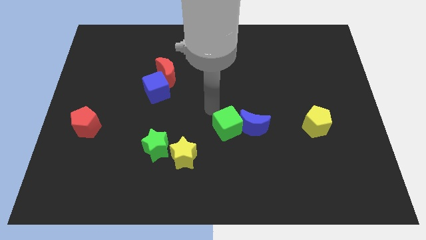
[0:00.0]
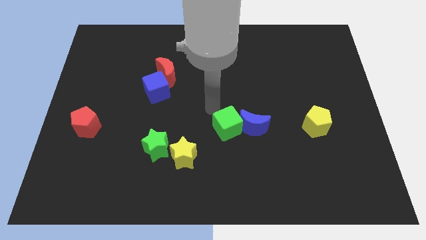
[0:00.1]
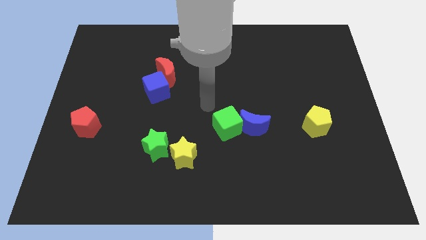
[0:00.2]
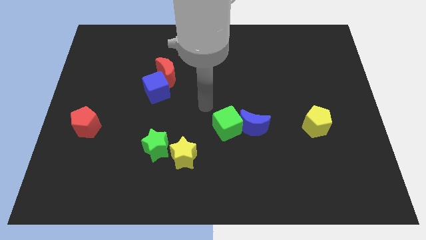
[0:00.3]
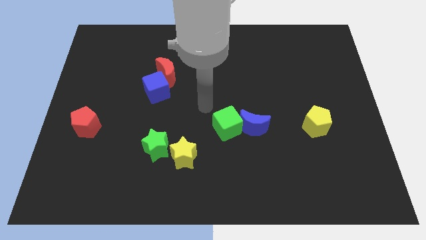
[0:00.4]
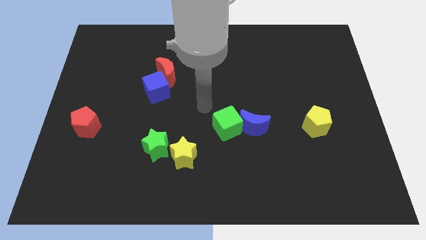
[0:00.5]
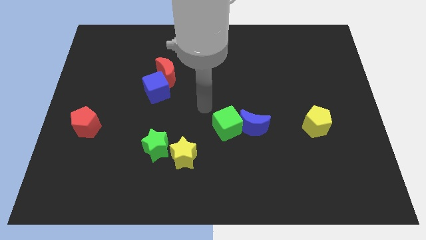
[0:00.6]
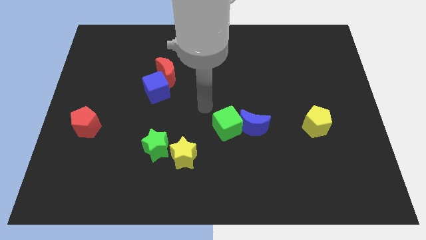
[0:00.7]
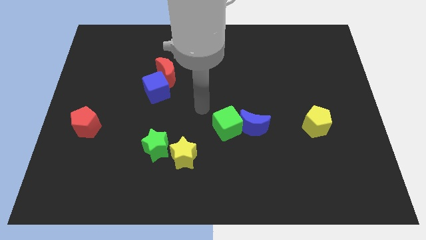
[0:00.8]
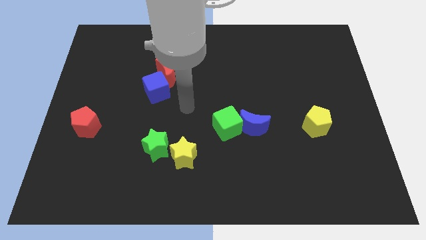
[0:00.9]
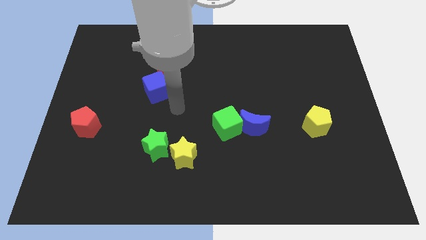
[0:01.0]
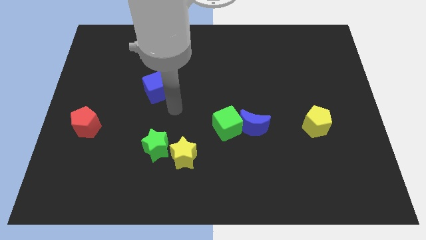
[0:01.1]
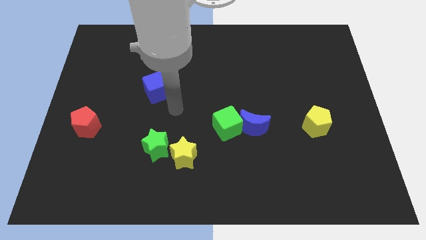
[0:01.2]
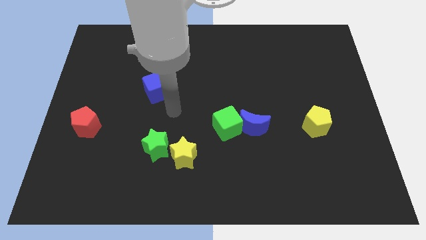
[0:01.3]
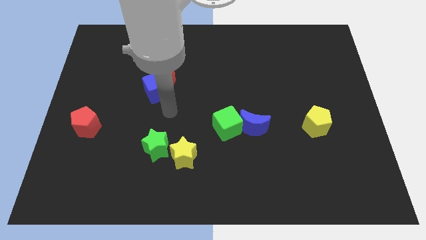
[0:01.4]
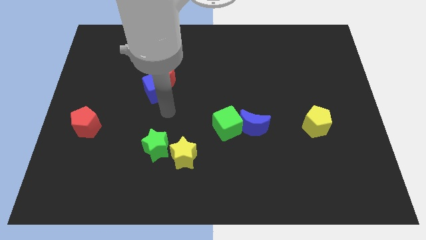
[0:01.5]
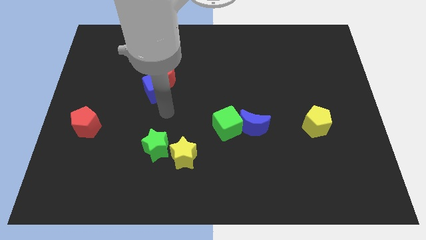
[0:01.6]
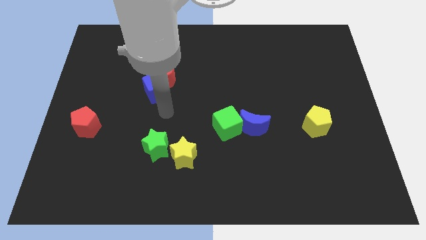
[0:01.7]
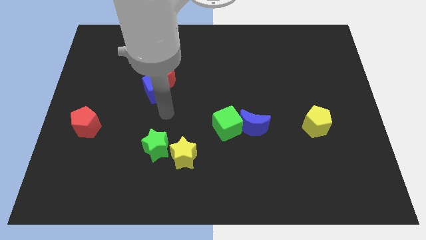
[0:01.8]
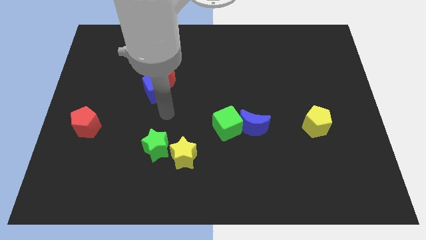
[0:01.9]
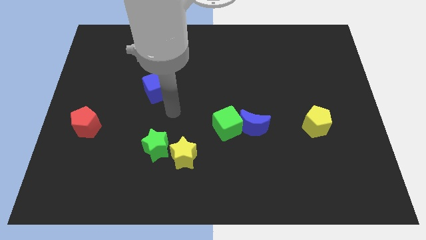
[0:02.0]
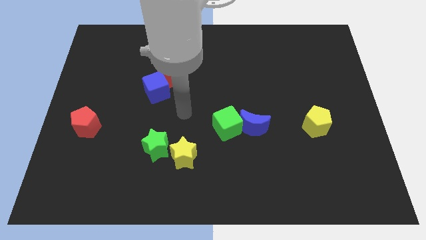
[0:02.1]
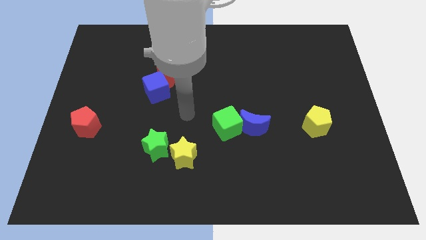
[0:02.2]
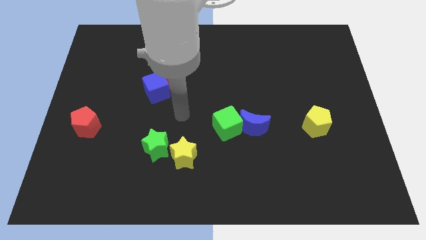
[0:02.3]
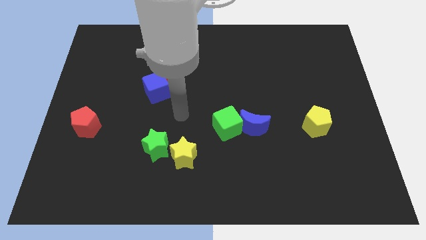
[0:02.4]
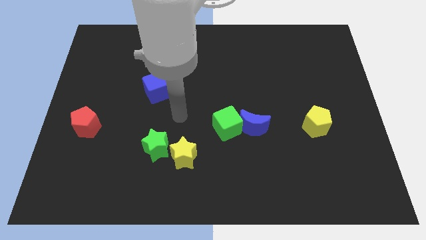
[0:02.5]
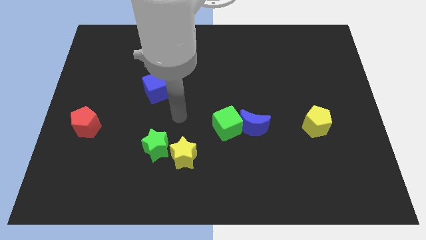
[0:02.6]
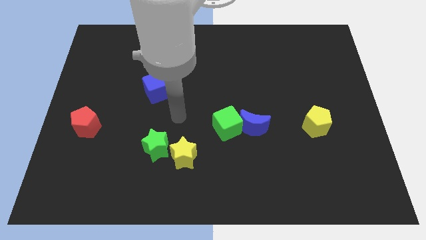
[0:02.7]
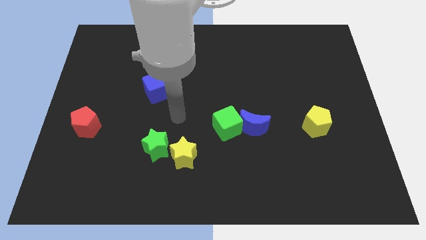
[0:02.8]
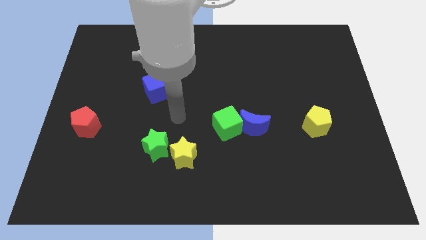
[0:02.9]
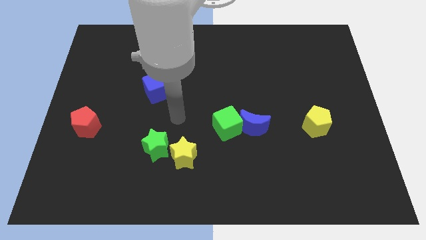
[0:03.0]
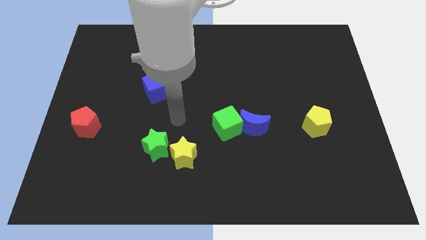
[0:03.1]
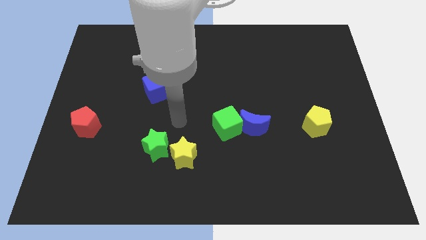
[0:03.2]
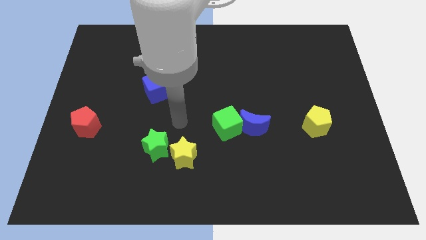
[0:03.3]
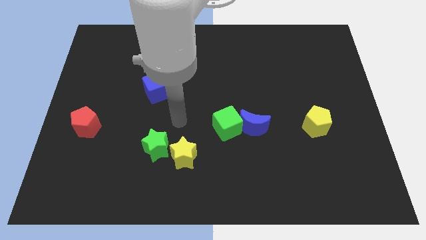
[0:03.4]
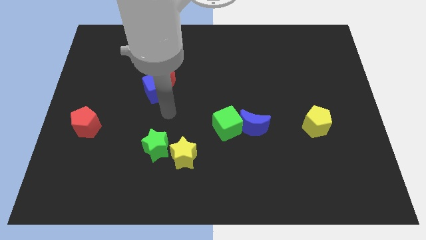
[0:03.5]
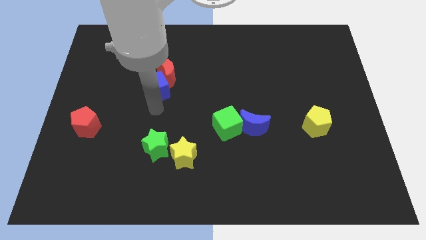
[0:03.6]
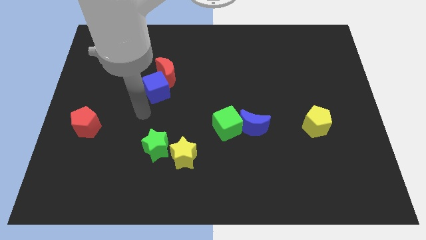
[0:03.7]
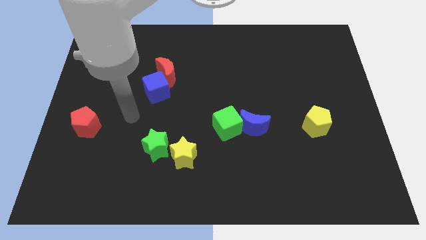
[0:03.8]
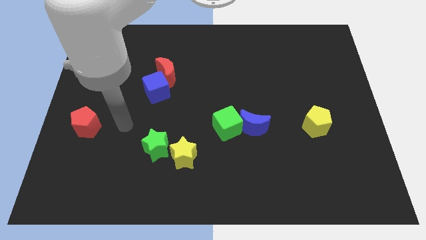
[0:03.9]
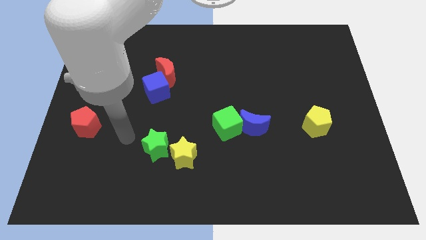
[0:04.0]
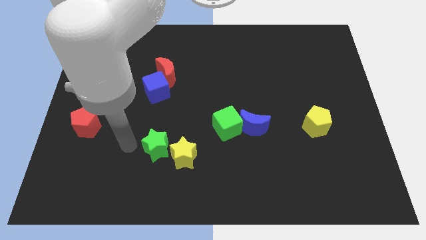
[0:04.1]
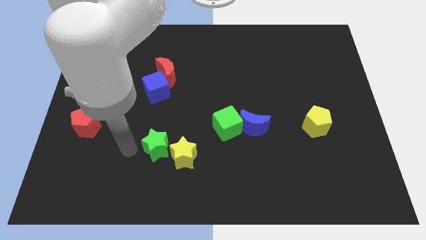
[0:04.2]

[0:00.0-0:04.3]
place the arm to the left side of the green star

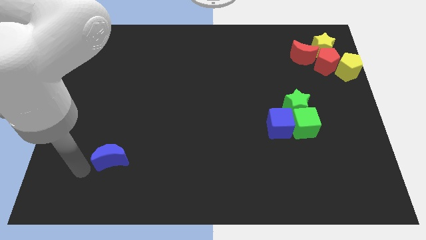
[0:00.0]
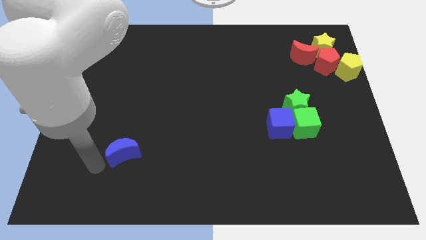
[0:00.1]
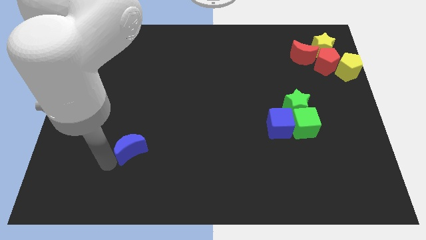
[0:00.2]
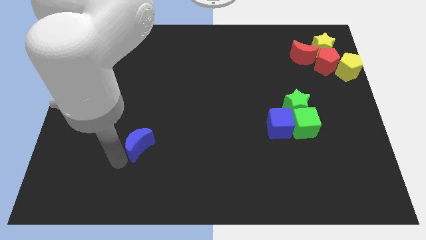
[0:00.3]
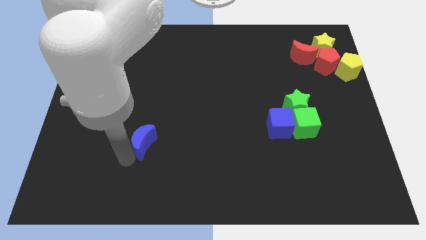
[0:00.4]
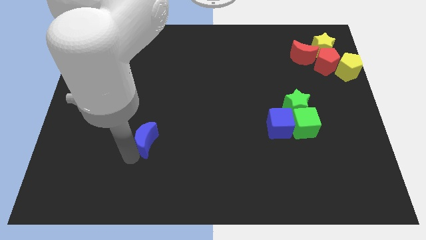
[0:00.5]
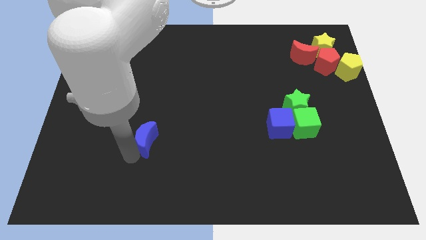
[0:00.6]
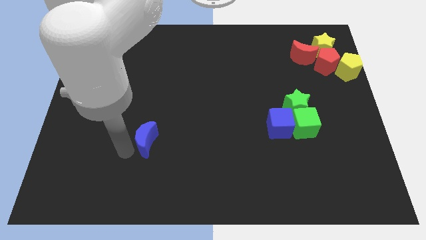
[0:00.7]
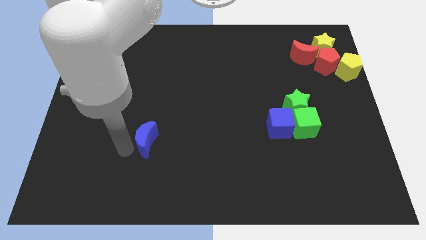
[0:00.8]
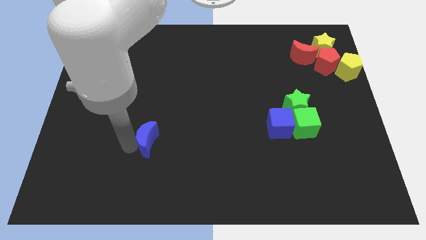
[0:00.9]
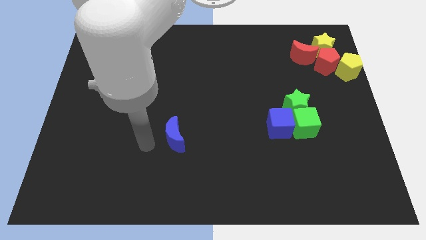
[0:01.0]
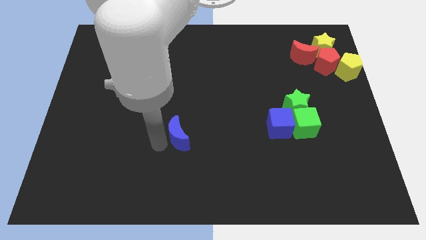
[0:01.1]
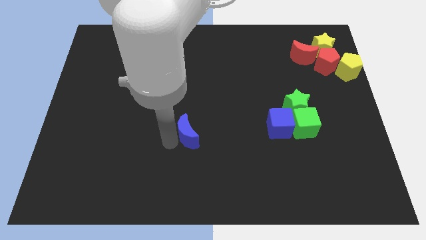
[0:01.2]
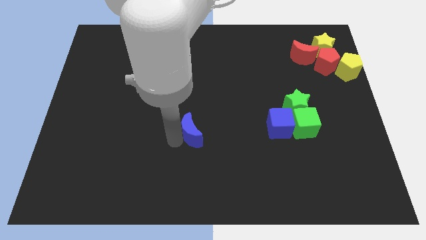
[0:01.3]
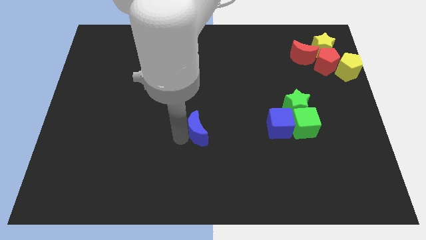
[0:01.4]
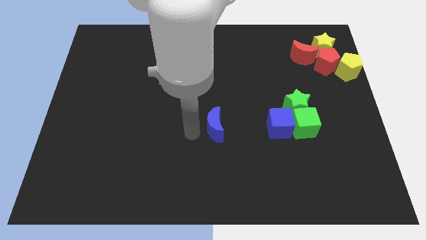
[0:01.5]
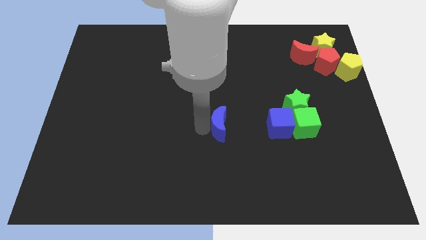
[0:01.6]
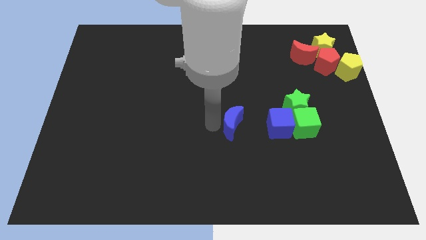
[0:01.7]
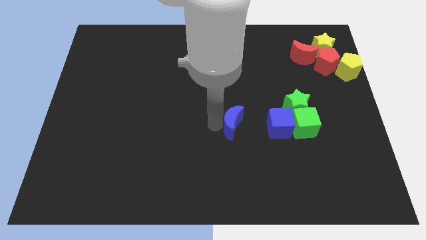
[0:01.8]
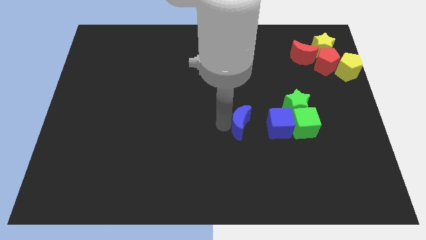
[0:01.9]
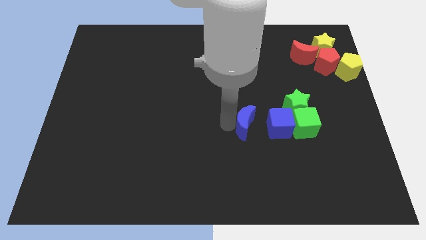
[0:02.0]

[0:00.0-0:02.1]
push the blue crescent to the blue cube

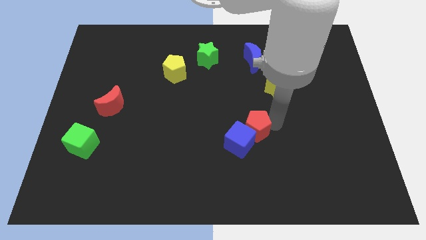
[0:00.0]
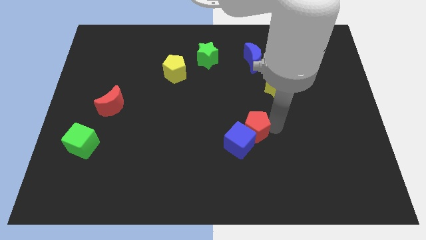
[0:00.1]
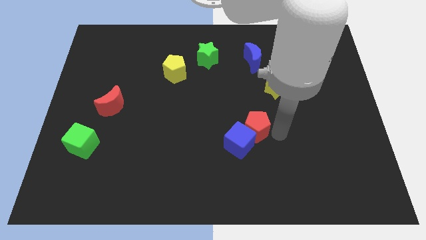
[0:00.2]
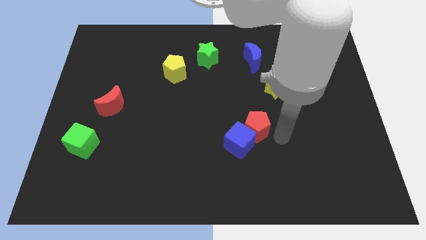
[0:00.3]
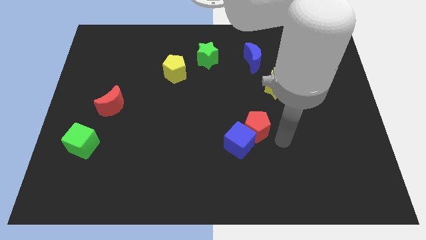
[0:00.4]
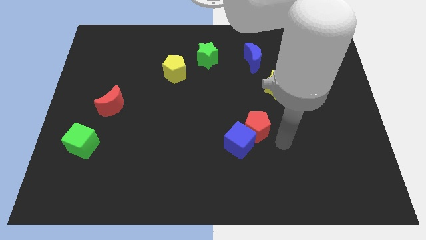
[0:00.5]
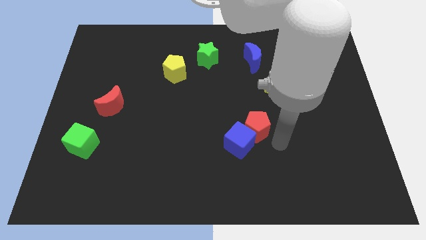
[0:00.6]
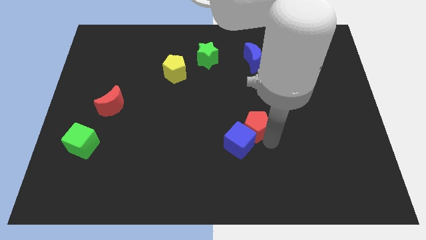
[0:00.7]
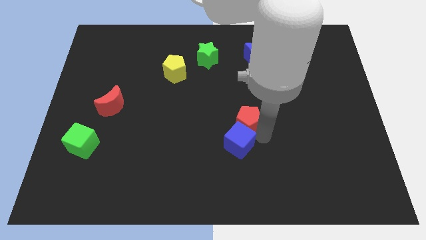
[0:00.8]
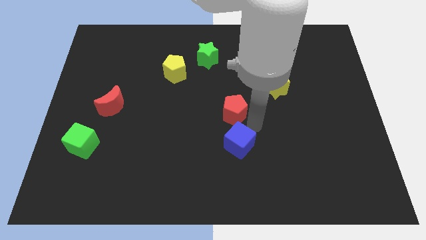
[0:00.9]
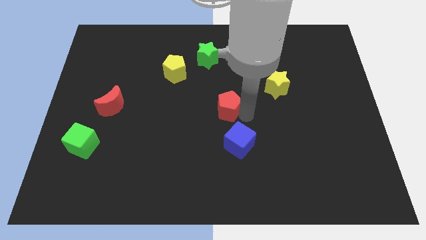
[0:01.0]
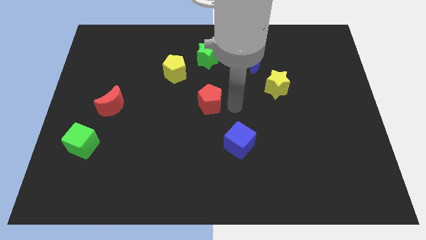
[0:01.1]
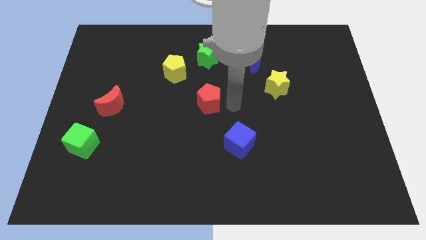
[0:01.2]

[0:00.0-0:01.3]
place red pentagon in between yellow and blue cube

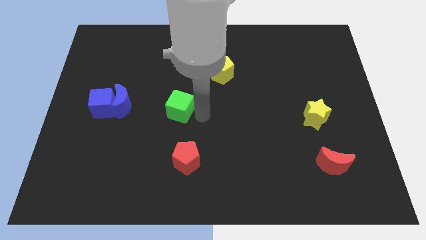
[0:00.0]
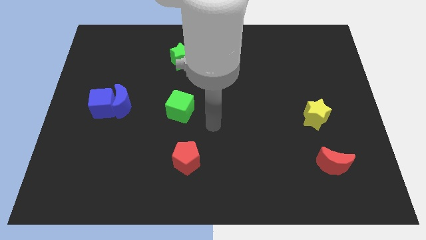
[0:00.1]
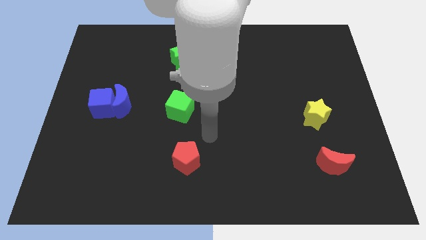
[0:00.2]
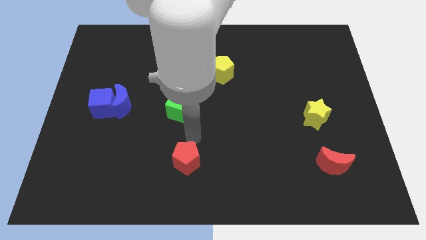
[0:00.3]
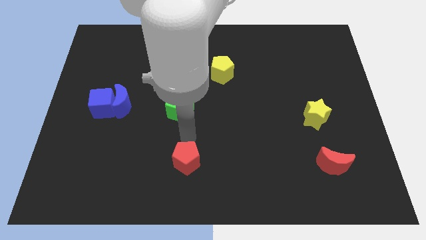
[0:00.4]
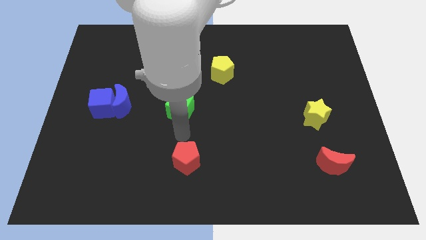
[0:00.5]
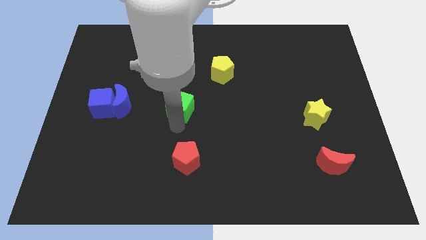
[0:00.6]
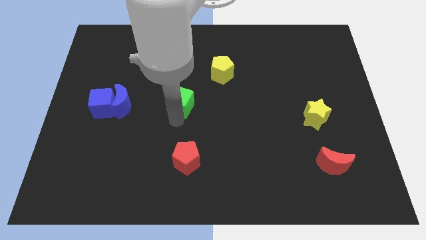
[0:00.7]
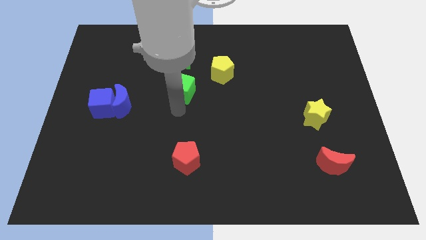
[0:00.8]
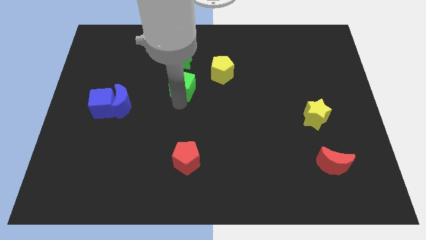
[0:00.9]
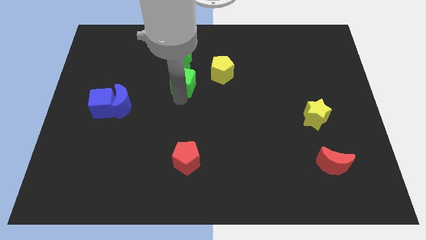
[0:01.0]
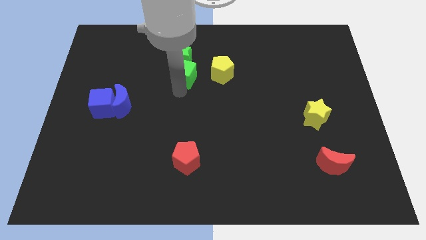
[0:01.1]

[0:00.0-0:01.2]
push green cube towards green star
